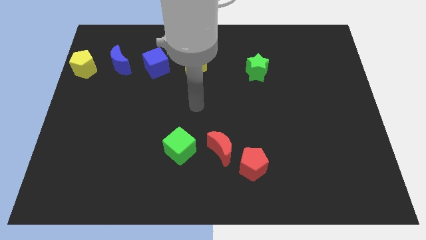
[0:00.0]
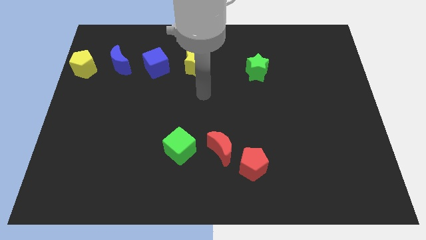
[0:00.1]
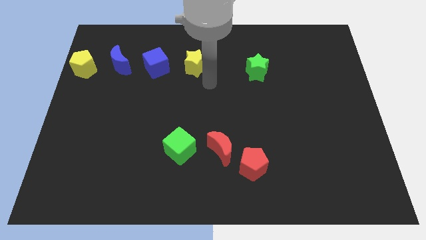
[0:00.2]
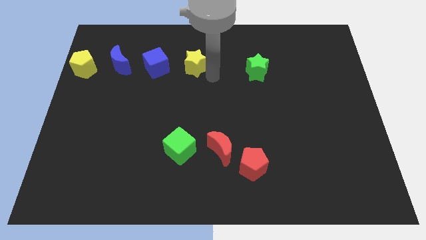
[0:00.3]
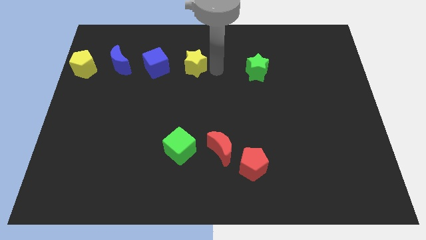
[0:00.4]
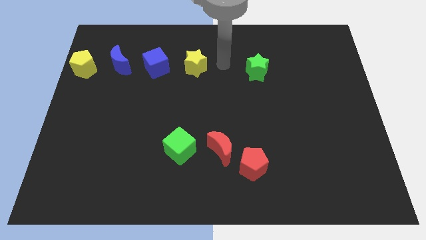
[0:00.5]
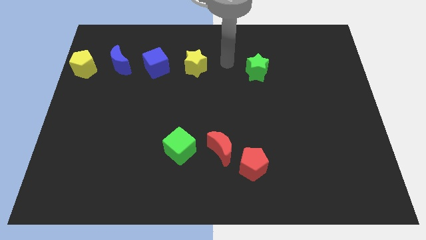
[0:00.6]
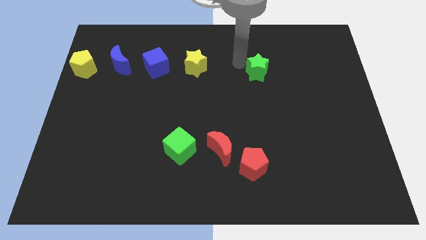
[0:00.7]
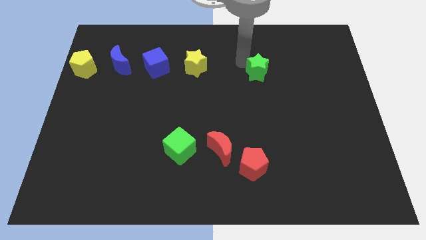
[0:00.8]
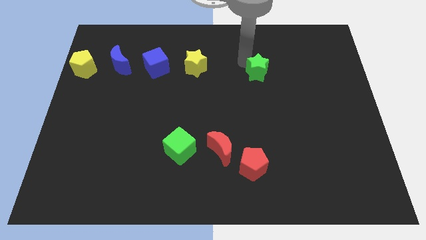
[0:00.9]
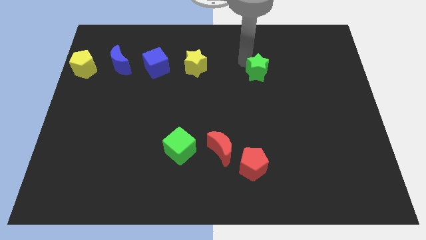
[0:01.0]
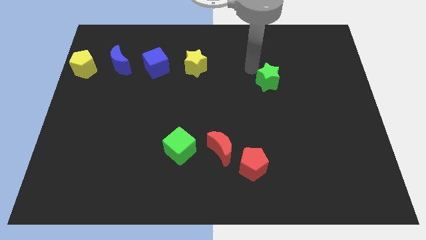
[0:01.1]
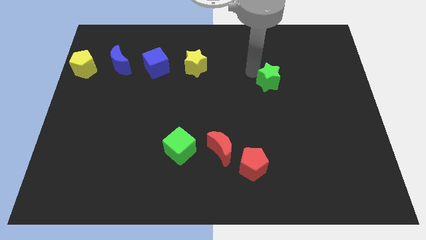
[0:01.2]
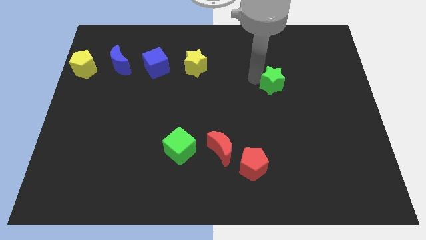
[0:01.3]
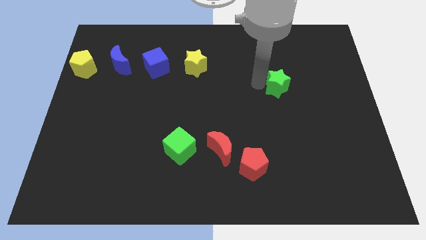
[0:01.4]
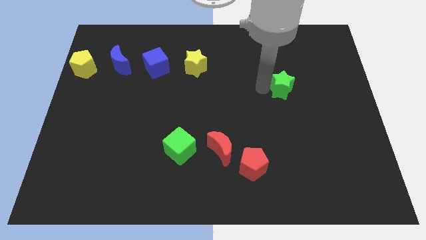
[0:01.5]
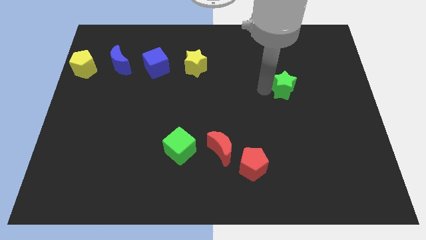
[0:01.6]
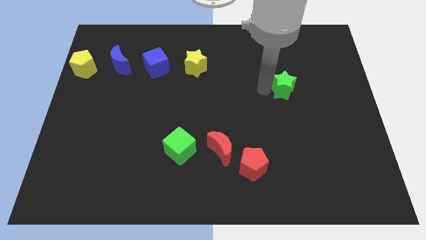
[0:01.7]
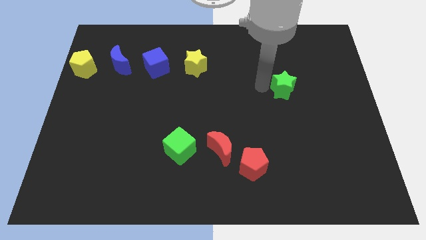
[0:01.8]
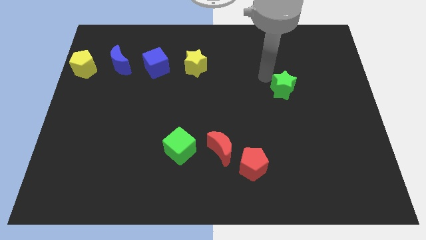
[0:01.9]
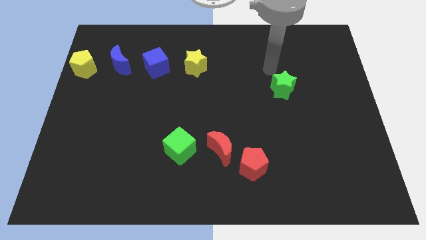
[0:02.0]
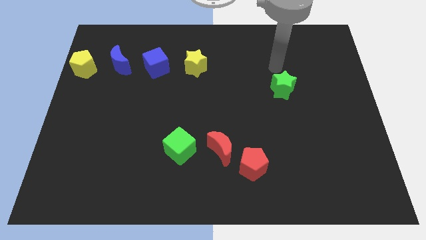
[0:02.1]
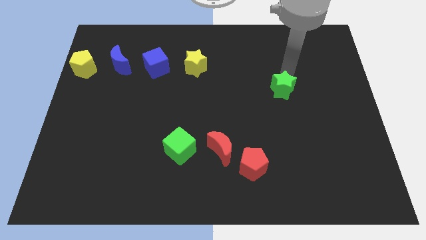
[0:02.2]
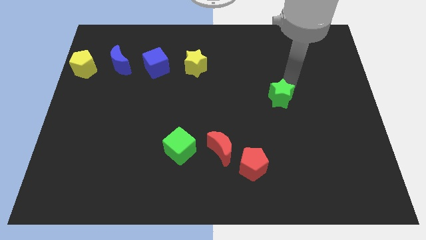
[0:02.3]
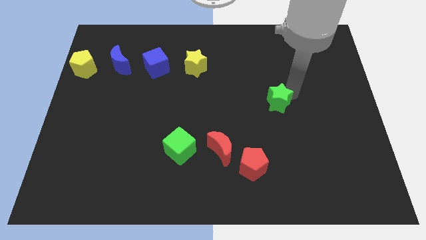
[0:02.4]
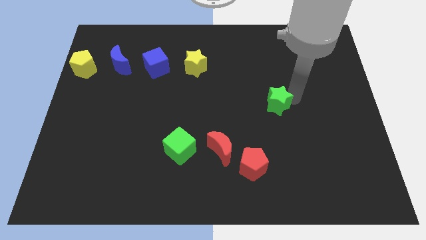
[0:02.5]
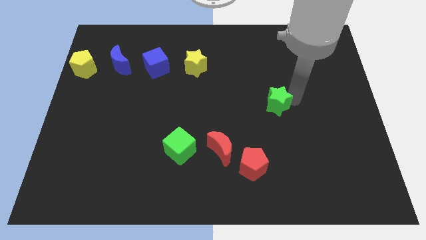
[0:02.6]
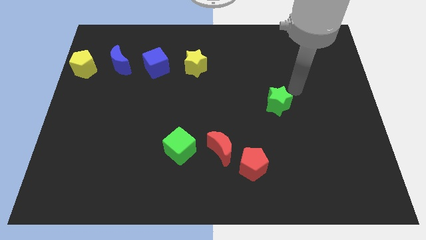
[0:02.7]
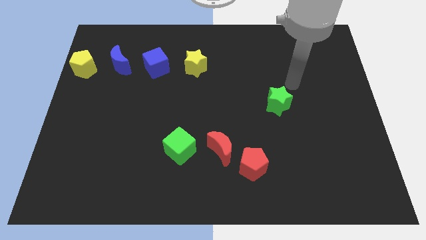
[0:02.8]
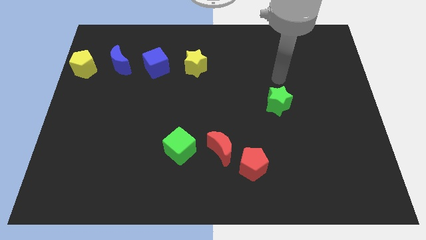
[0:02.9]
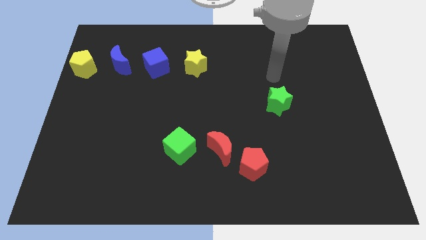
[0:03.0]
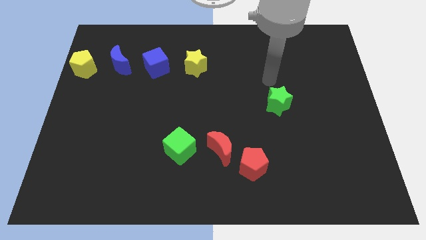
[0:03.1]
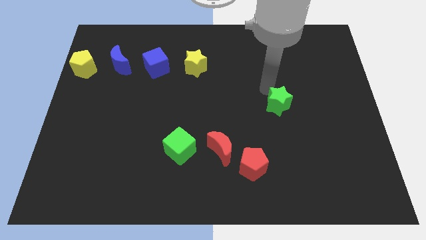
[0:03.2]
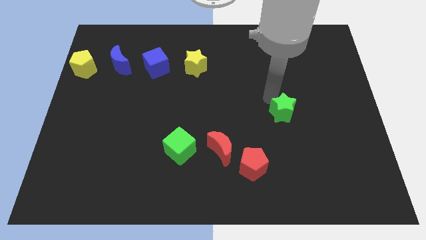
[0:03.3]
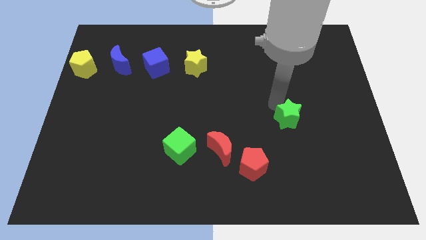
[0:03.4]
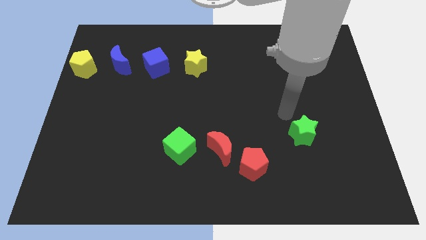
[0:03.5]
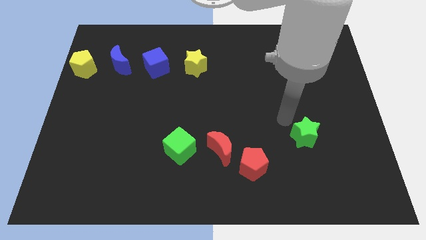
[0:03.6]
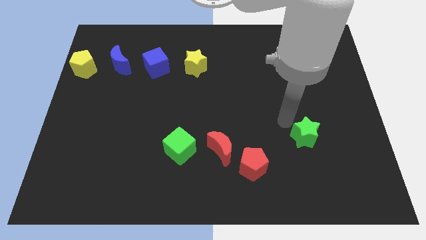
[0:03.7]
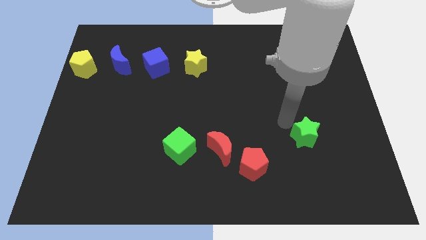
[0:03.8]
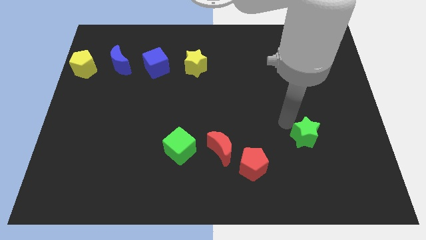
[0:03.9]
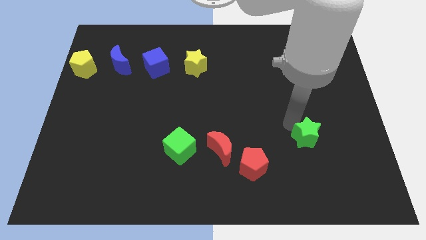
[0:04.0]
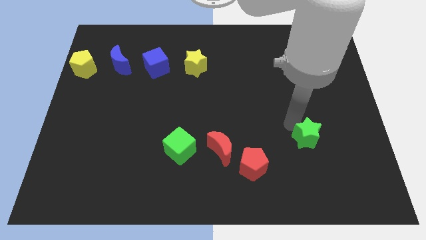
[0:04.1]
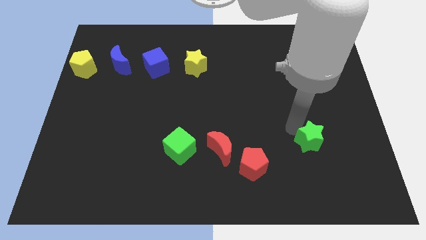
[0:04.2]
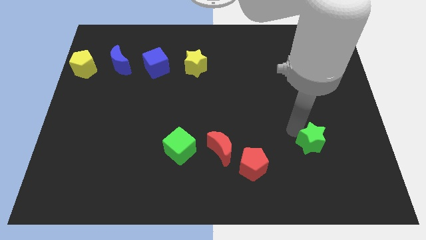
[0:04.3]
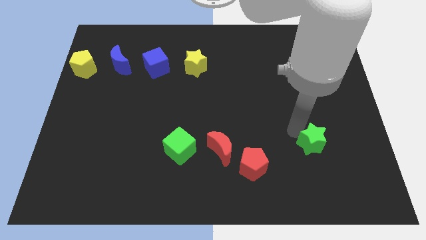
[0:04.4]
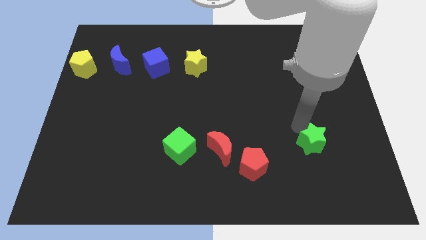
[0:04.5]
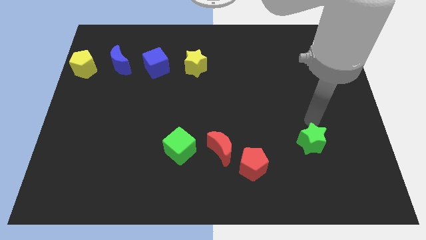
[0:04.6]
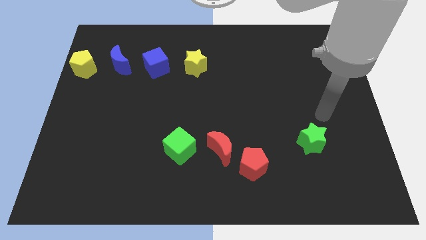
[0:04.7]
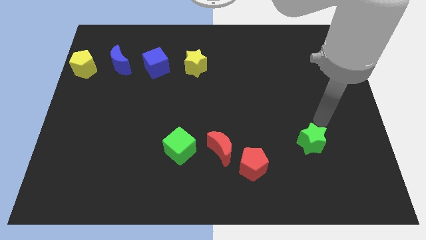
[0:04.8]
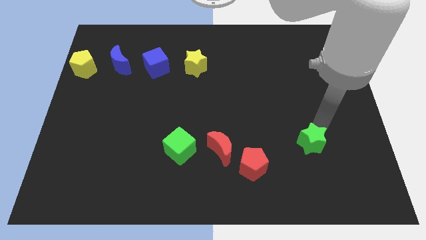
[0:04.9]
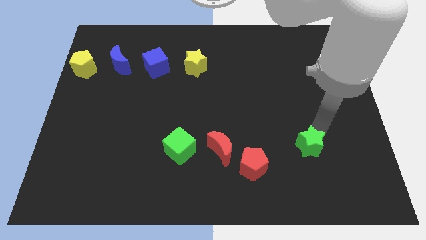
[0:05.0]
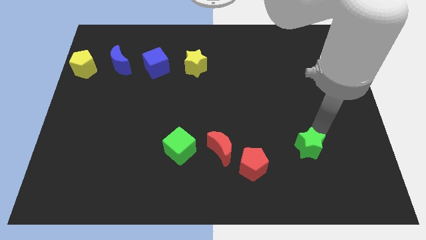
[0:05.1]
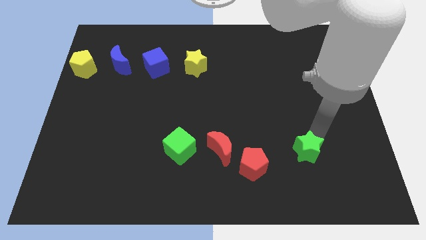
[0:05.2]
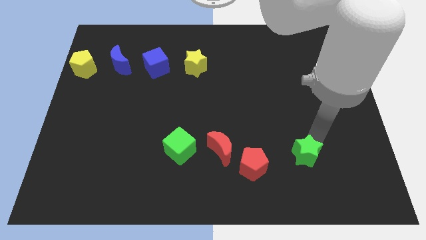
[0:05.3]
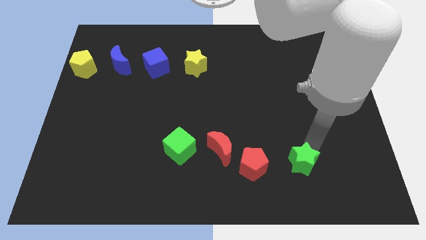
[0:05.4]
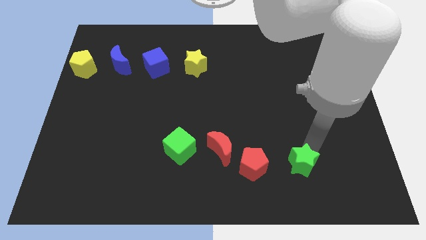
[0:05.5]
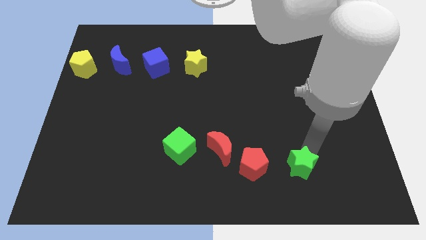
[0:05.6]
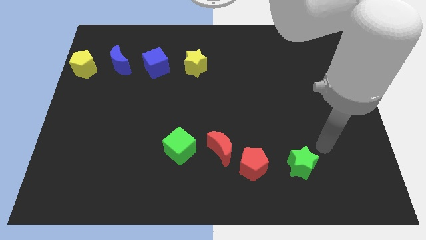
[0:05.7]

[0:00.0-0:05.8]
move the green star to the right of the red pentagon

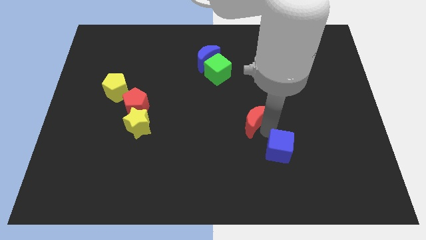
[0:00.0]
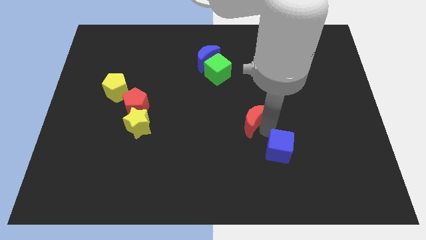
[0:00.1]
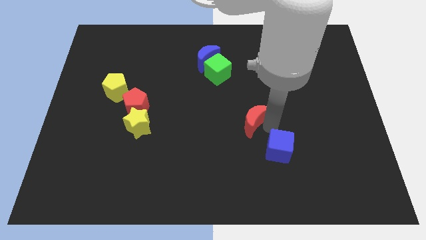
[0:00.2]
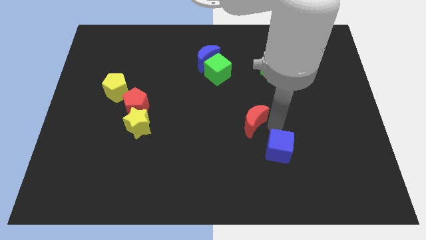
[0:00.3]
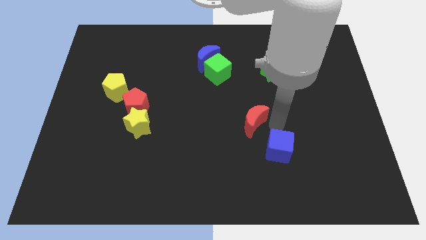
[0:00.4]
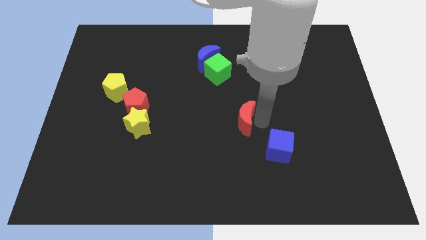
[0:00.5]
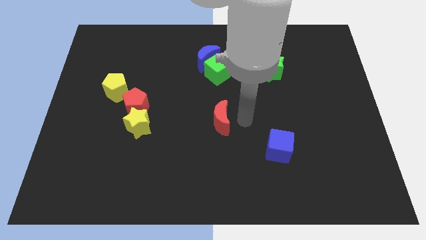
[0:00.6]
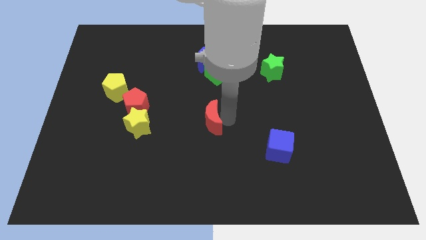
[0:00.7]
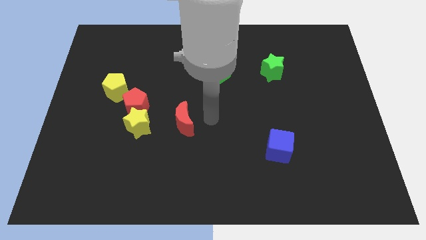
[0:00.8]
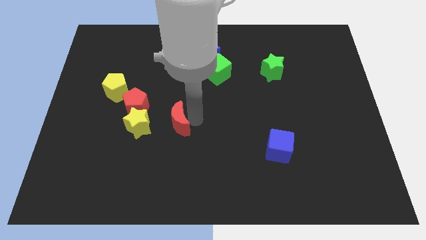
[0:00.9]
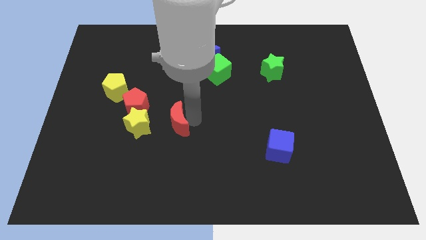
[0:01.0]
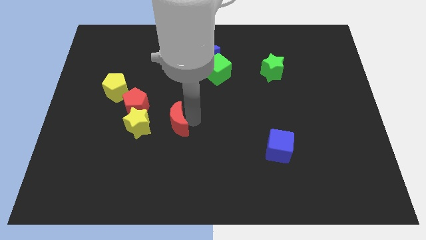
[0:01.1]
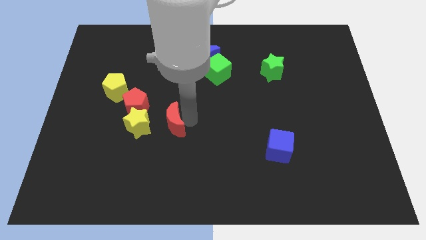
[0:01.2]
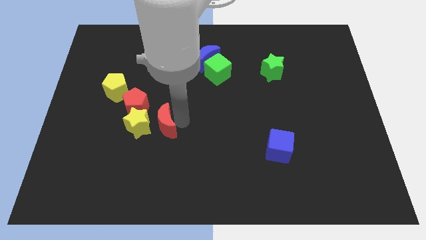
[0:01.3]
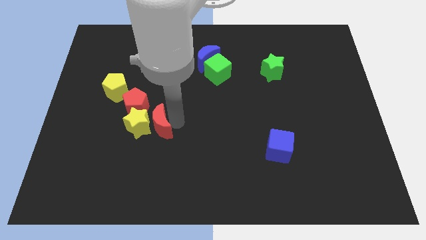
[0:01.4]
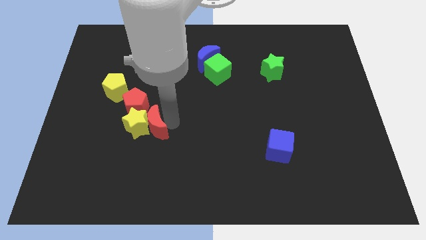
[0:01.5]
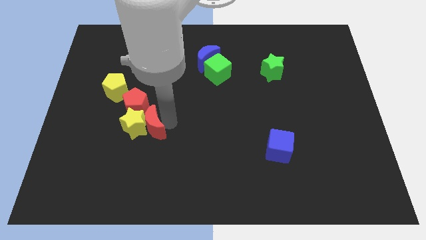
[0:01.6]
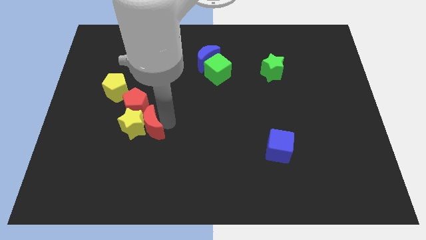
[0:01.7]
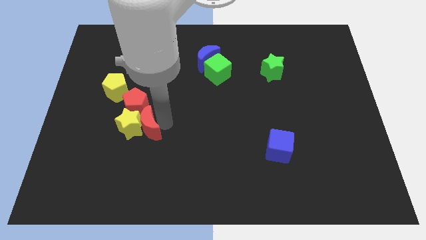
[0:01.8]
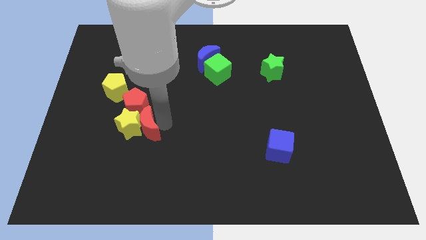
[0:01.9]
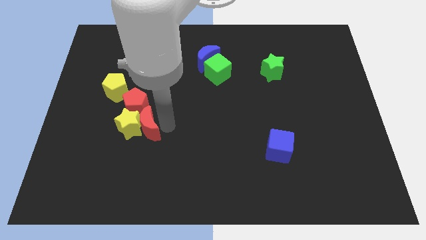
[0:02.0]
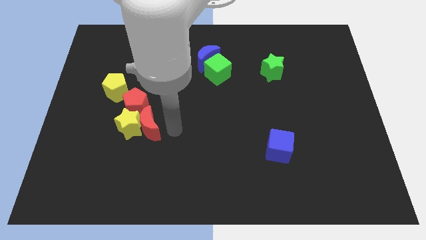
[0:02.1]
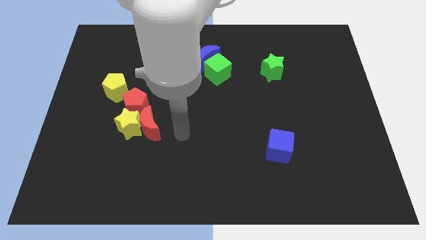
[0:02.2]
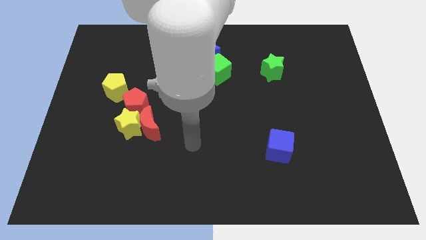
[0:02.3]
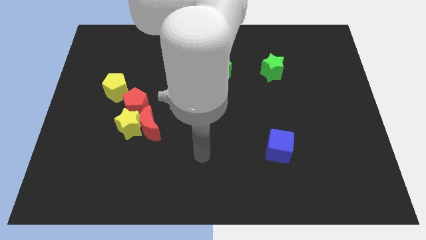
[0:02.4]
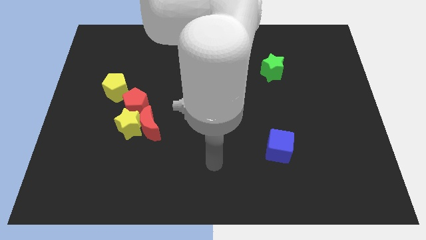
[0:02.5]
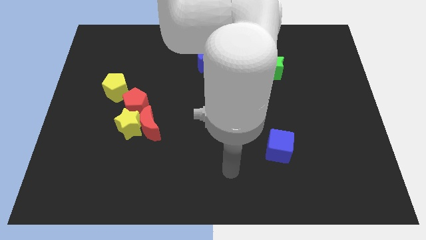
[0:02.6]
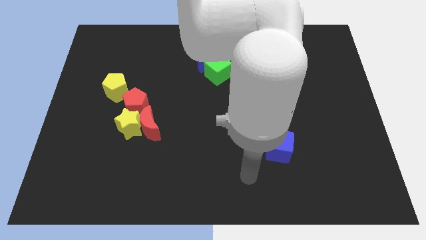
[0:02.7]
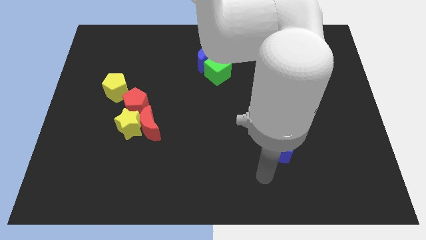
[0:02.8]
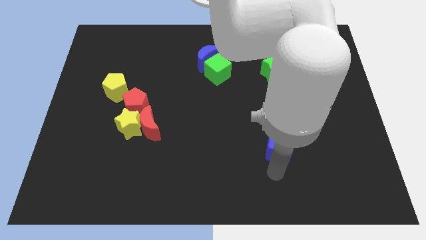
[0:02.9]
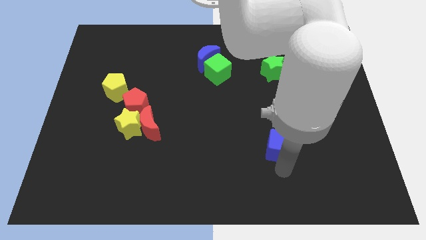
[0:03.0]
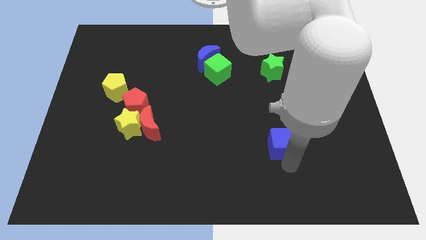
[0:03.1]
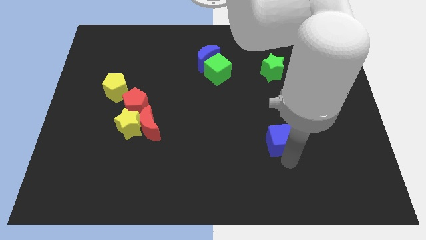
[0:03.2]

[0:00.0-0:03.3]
push the red crescent into the yellow star
